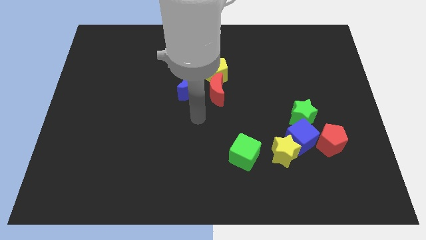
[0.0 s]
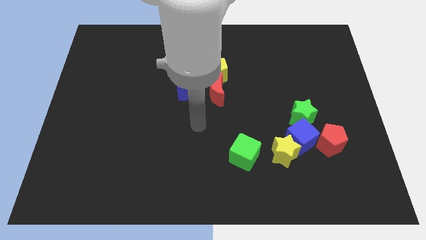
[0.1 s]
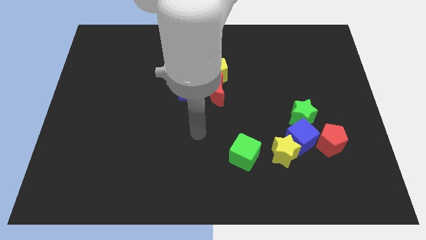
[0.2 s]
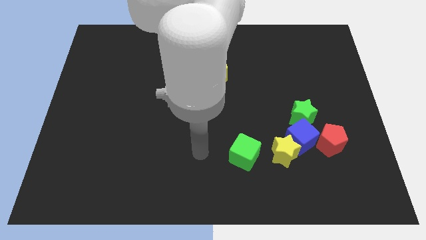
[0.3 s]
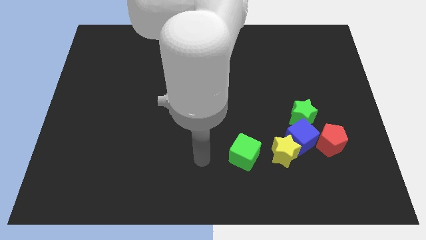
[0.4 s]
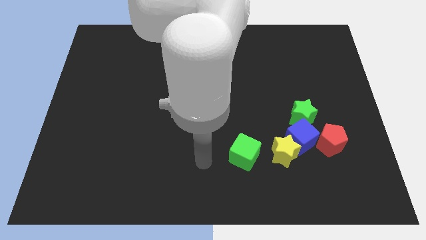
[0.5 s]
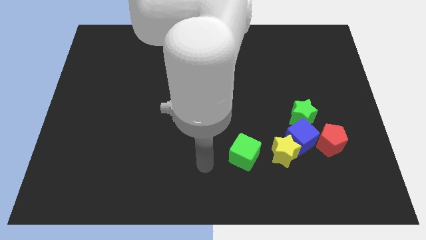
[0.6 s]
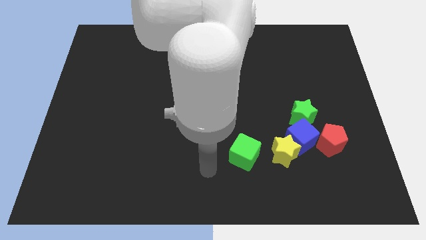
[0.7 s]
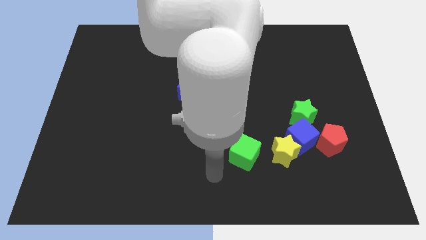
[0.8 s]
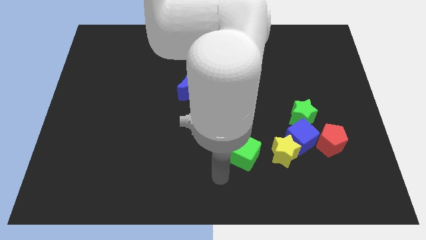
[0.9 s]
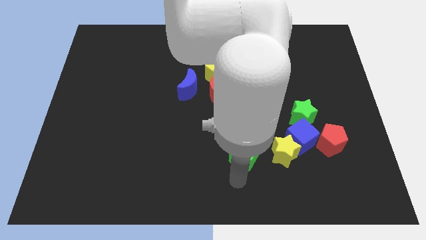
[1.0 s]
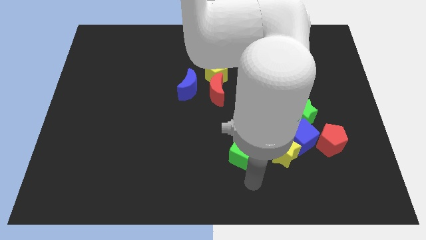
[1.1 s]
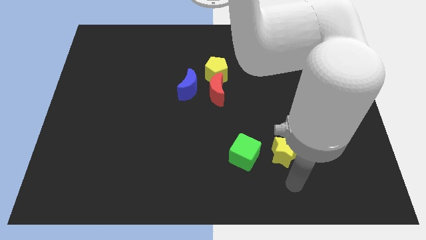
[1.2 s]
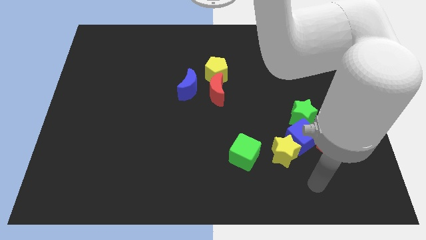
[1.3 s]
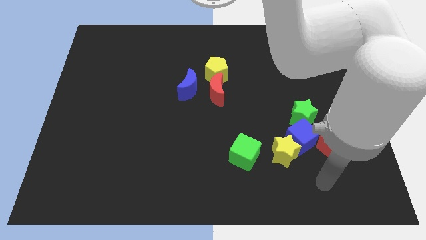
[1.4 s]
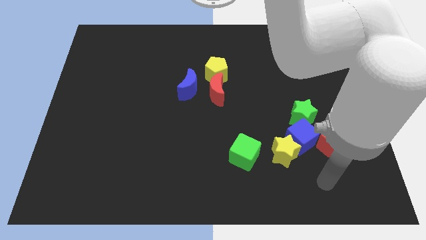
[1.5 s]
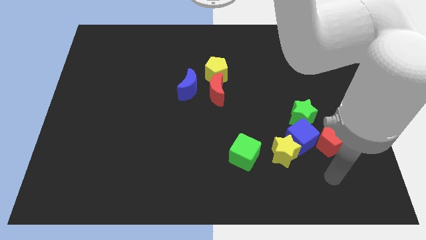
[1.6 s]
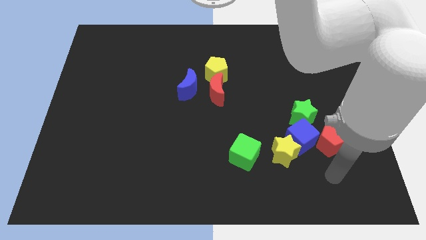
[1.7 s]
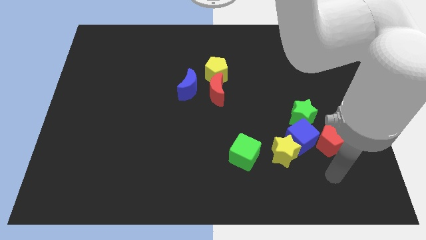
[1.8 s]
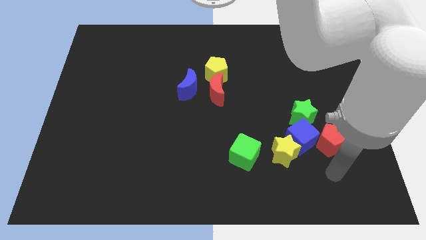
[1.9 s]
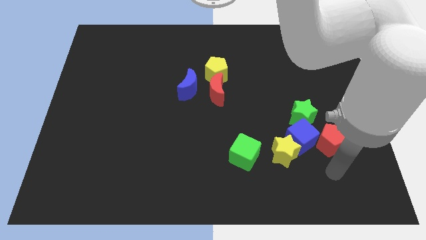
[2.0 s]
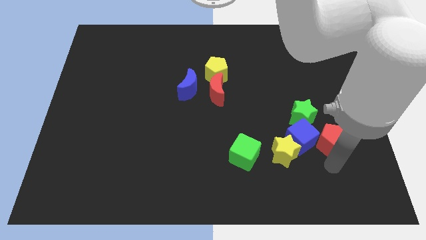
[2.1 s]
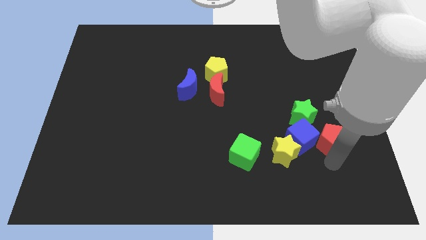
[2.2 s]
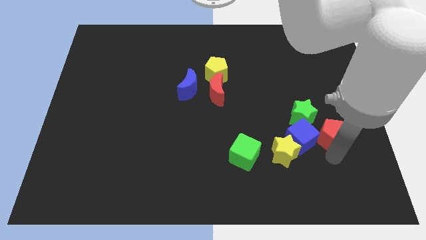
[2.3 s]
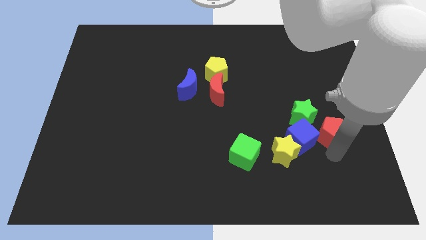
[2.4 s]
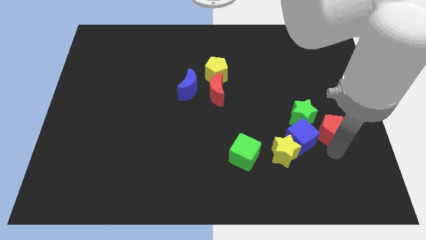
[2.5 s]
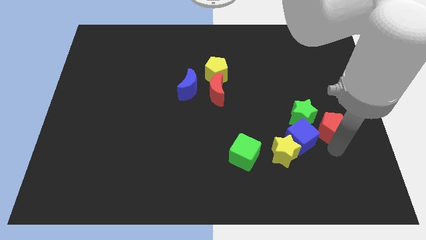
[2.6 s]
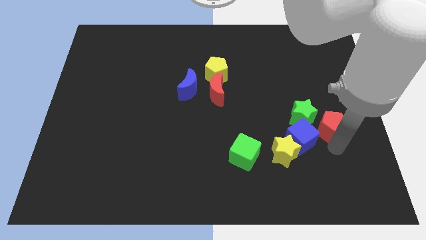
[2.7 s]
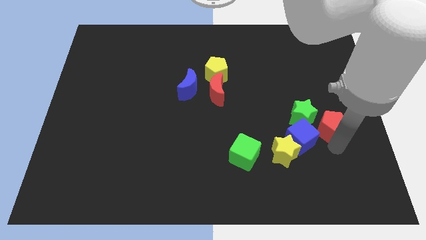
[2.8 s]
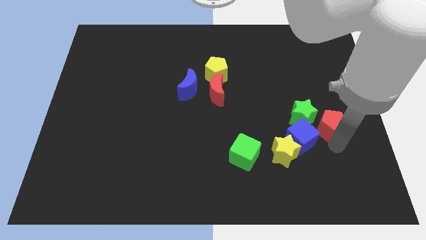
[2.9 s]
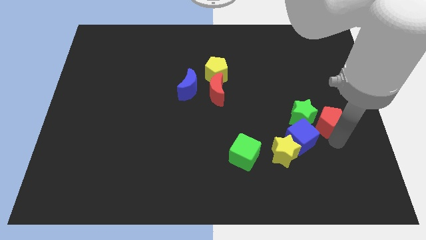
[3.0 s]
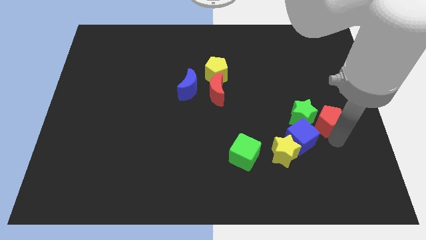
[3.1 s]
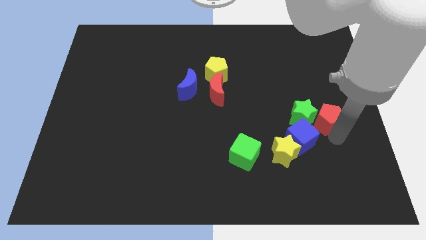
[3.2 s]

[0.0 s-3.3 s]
slide the red pentagon to the green star

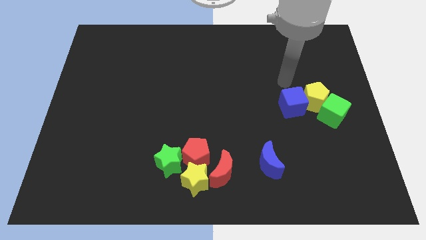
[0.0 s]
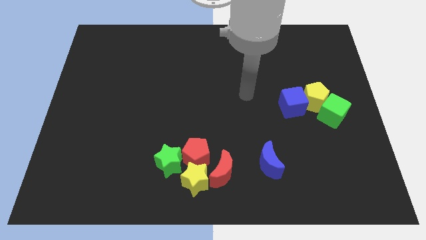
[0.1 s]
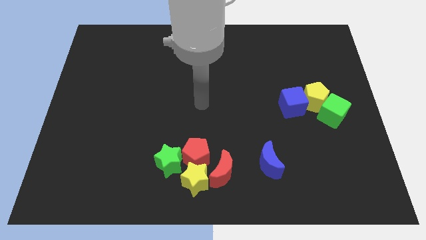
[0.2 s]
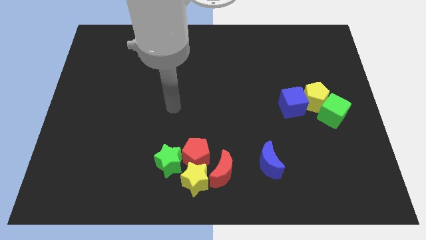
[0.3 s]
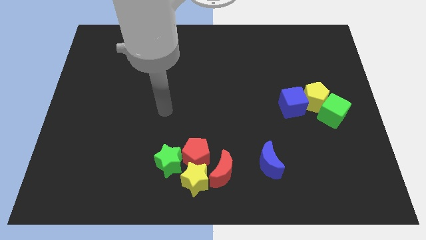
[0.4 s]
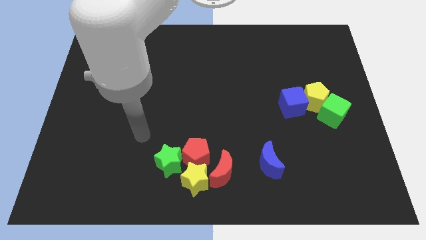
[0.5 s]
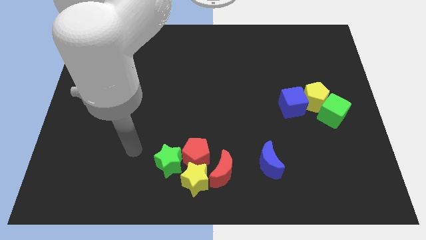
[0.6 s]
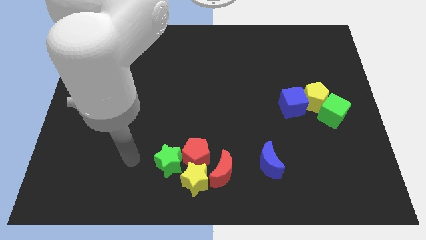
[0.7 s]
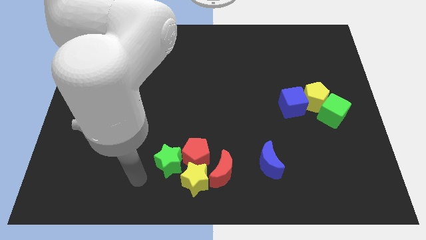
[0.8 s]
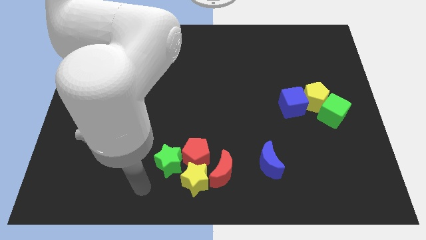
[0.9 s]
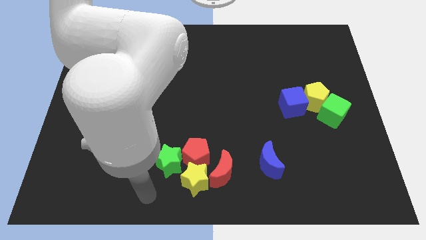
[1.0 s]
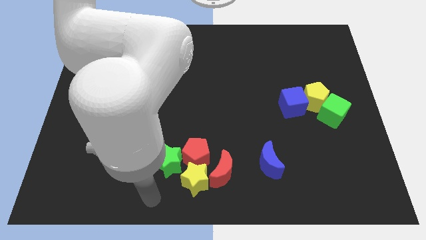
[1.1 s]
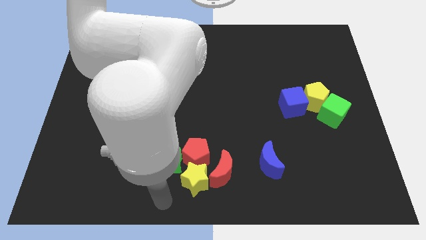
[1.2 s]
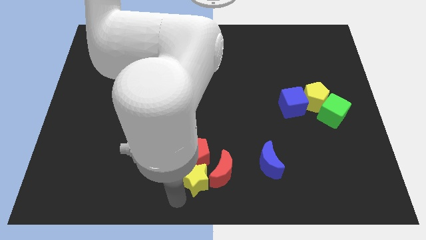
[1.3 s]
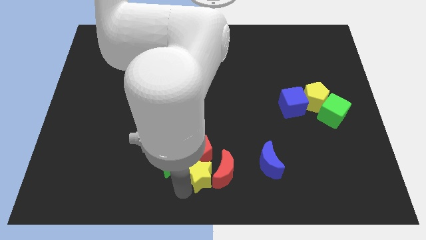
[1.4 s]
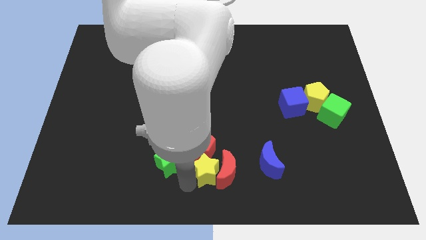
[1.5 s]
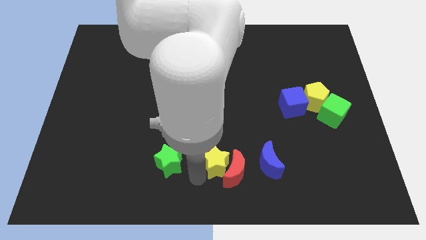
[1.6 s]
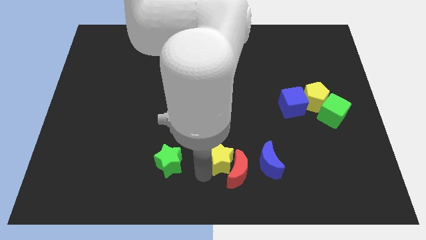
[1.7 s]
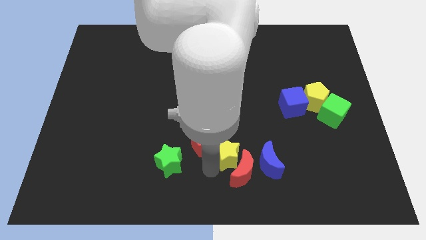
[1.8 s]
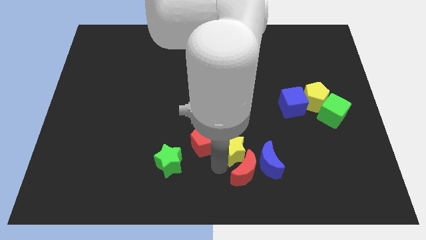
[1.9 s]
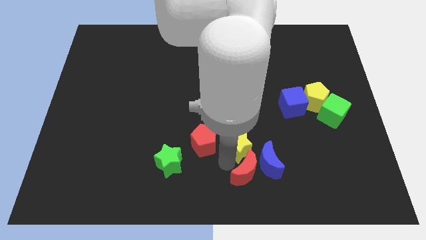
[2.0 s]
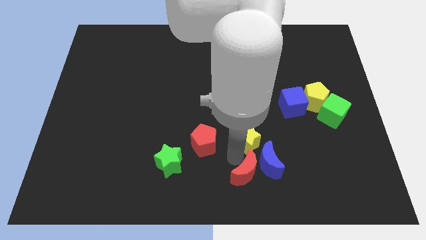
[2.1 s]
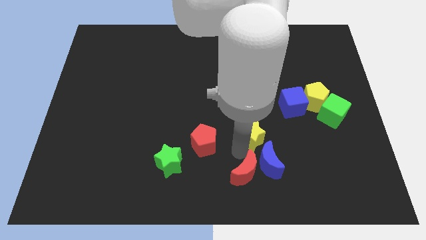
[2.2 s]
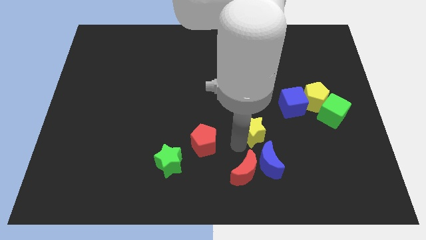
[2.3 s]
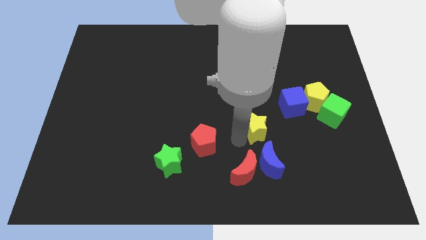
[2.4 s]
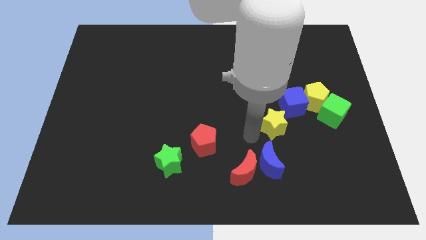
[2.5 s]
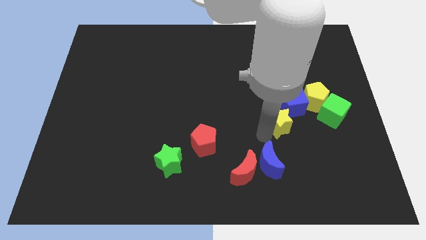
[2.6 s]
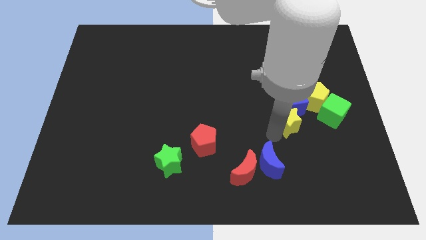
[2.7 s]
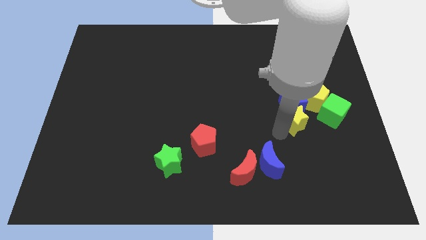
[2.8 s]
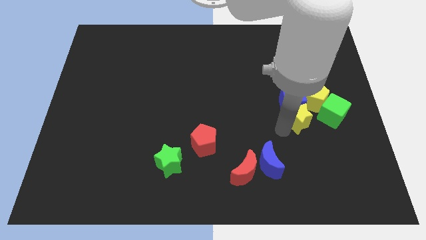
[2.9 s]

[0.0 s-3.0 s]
move the yellow star close to the blue cube

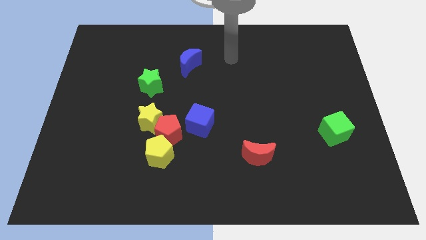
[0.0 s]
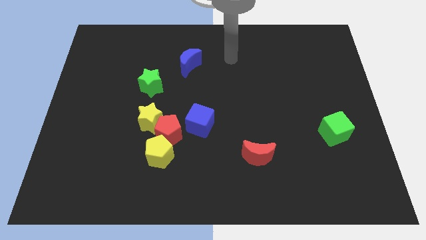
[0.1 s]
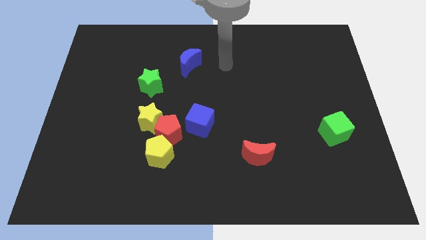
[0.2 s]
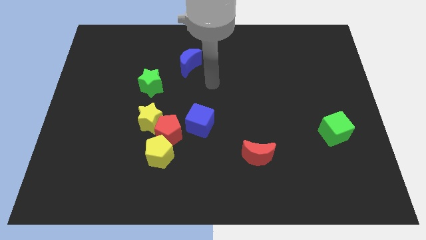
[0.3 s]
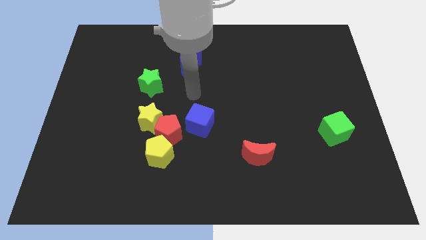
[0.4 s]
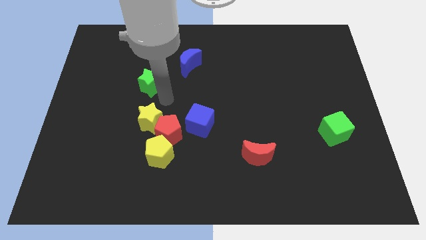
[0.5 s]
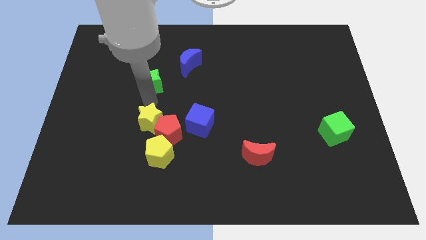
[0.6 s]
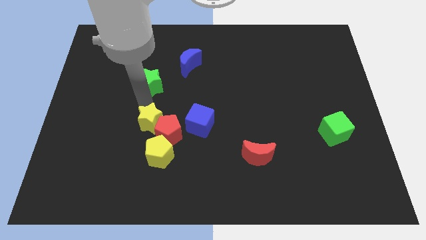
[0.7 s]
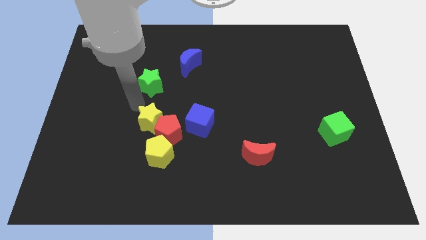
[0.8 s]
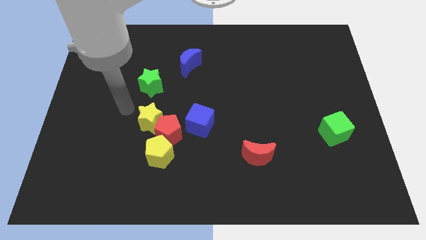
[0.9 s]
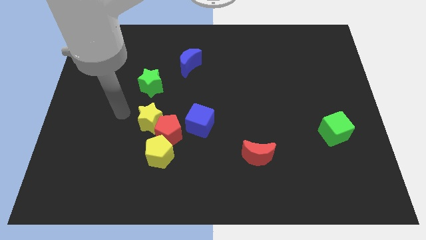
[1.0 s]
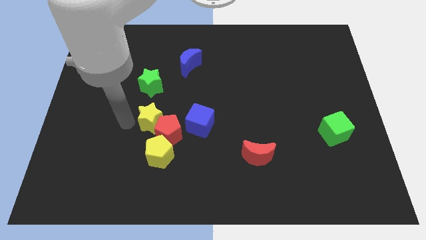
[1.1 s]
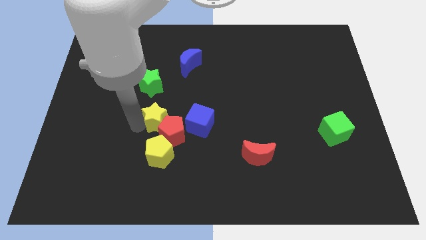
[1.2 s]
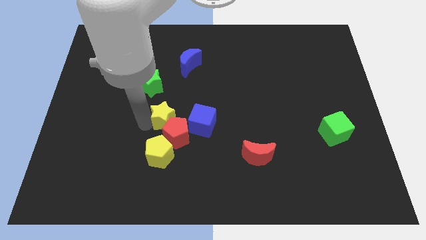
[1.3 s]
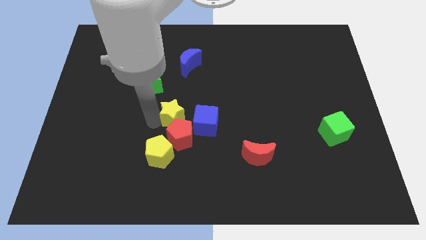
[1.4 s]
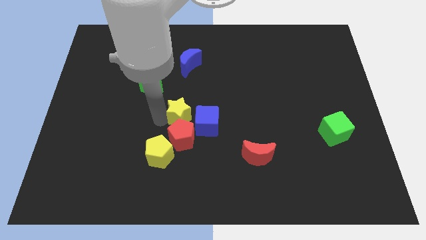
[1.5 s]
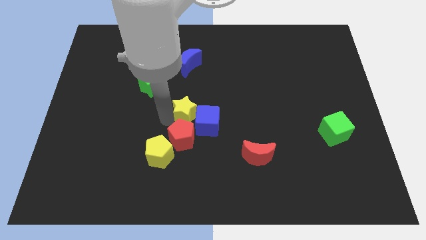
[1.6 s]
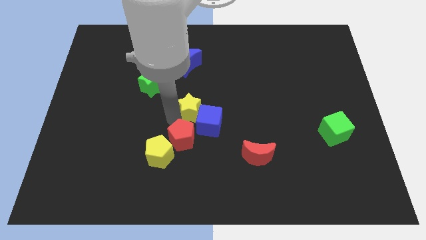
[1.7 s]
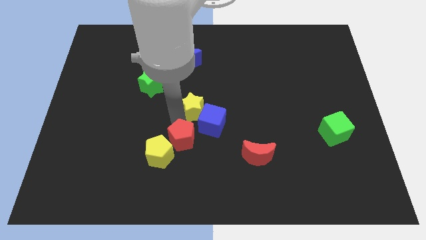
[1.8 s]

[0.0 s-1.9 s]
slide the yellow star close to the blue cube

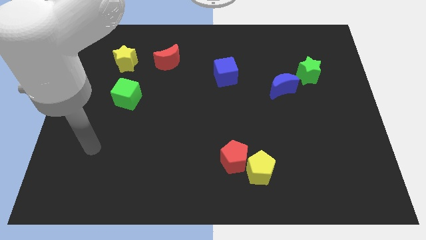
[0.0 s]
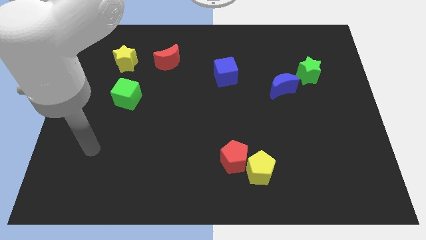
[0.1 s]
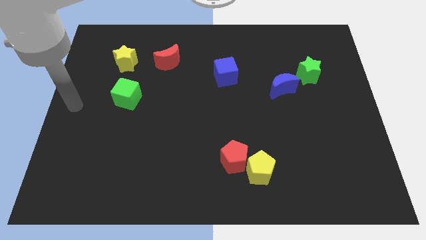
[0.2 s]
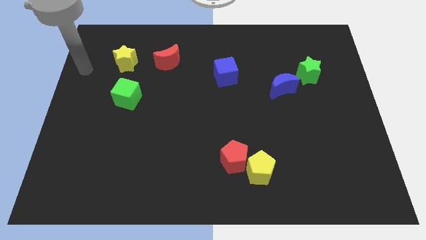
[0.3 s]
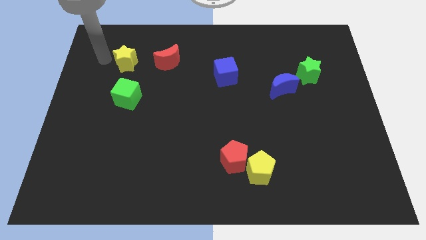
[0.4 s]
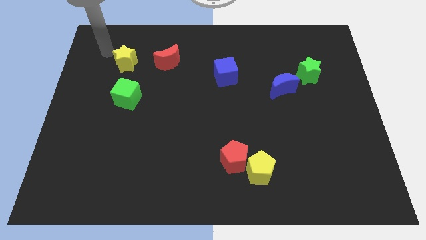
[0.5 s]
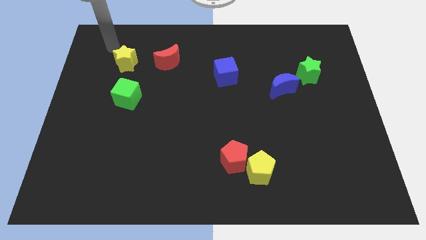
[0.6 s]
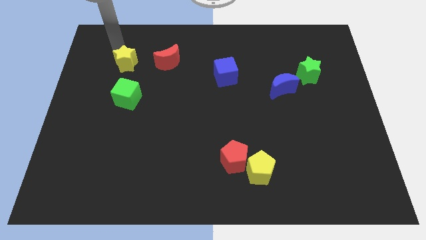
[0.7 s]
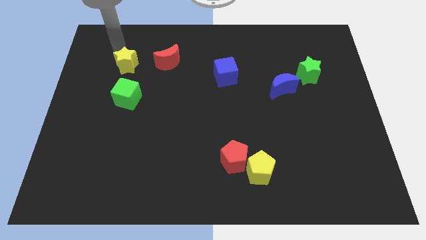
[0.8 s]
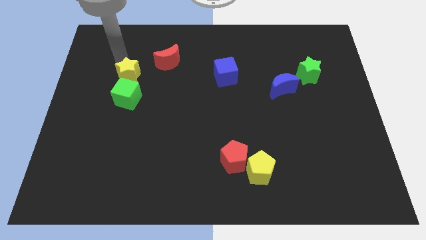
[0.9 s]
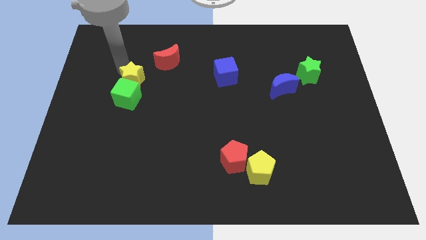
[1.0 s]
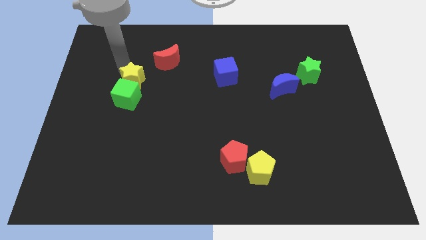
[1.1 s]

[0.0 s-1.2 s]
slide the yellow star next to the green cube
